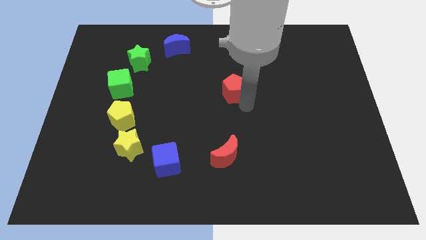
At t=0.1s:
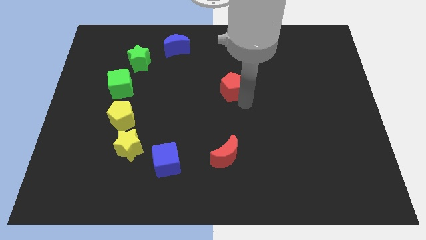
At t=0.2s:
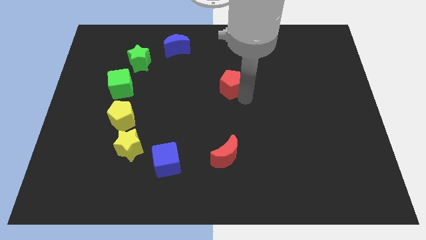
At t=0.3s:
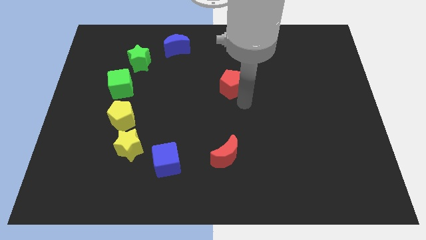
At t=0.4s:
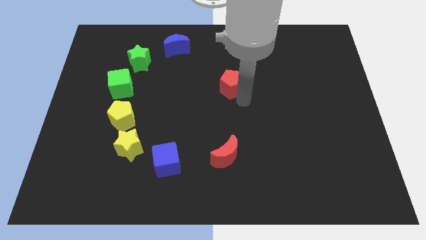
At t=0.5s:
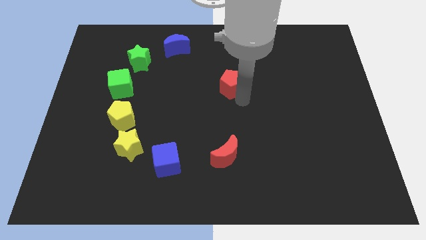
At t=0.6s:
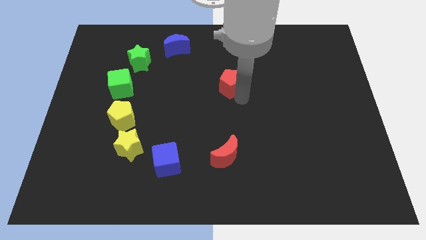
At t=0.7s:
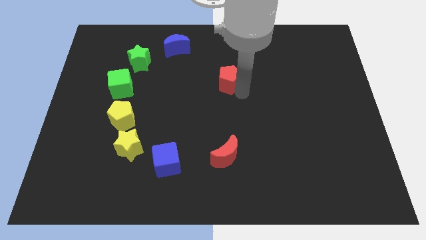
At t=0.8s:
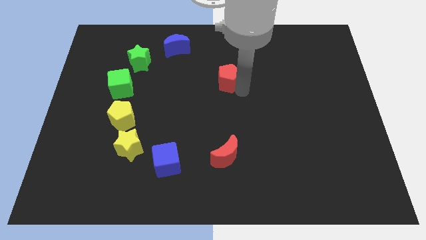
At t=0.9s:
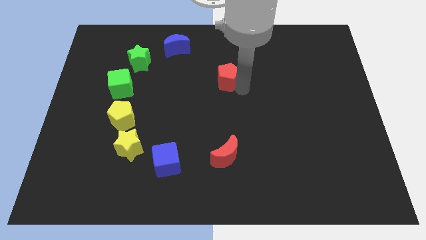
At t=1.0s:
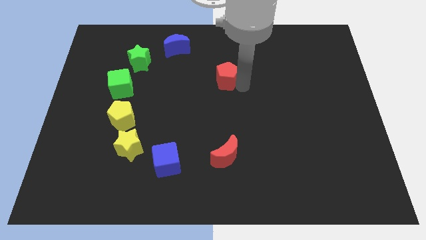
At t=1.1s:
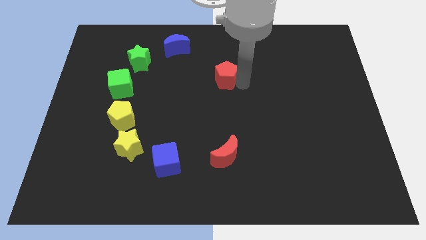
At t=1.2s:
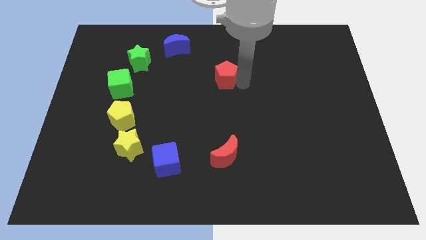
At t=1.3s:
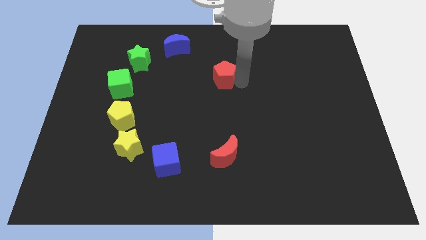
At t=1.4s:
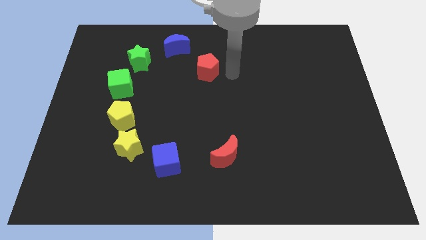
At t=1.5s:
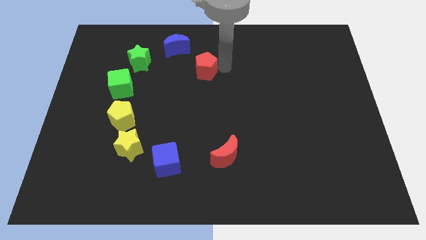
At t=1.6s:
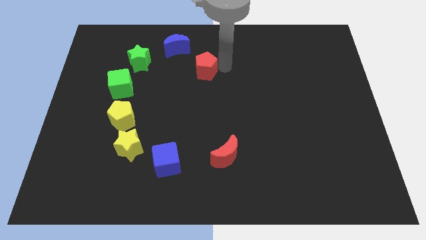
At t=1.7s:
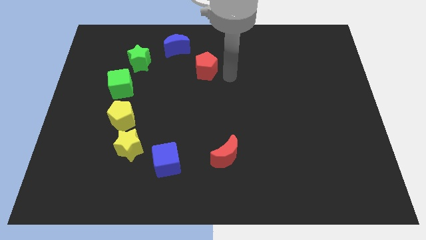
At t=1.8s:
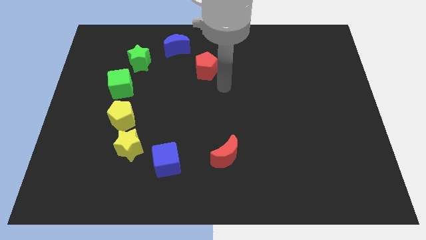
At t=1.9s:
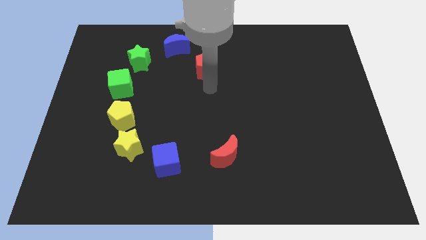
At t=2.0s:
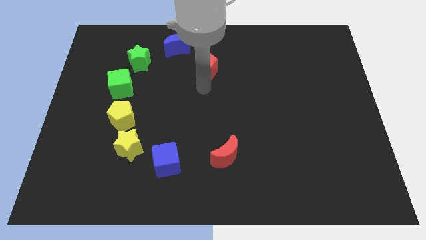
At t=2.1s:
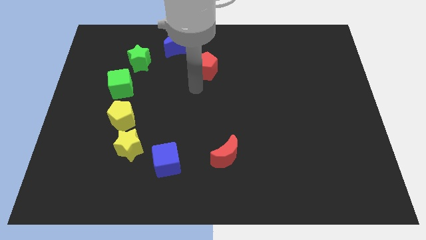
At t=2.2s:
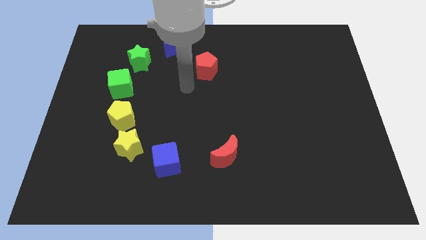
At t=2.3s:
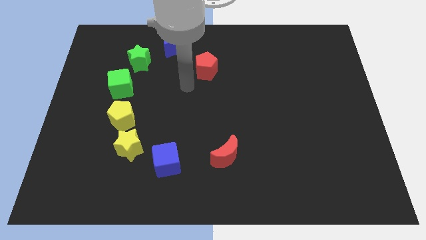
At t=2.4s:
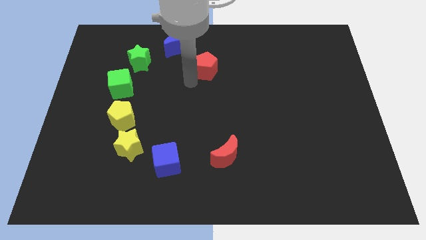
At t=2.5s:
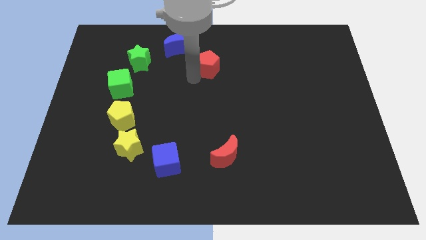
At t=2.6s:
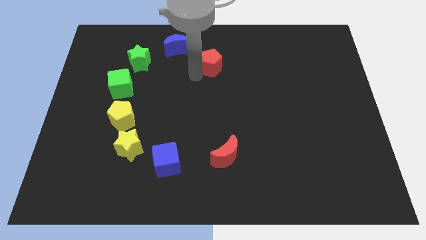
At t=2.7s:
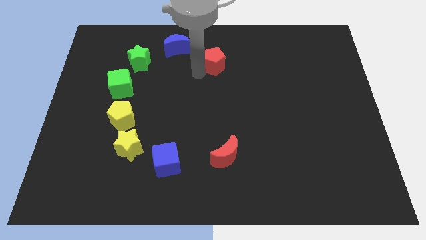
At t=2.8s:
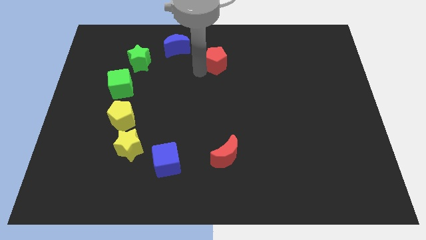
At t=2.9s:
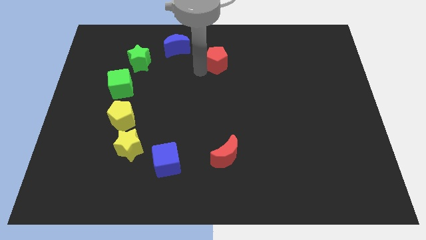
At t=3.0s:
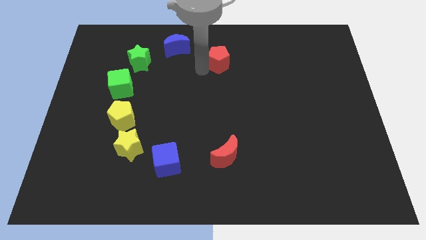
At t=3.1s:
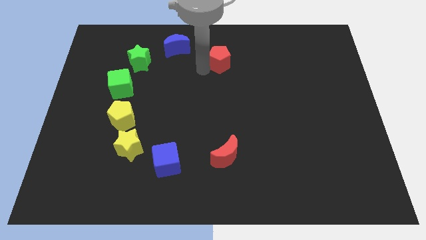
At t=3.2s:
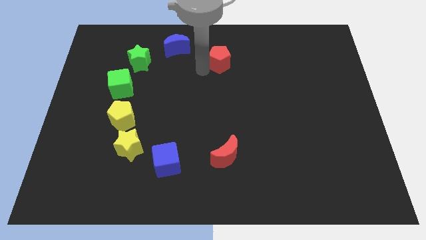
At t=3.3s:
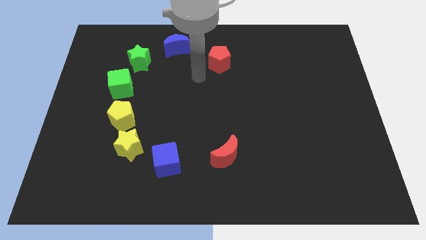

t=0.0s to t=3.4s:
move red pentagon near blue moon

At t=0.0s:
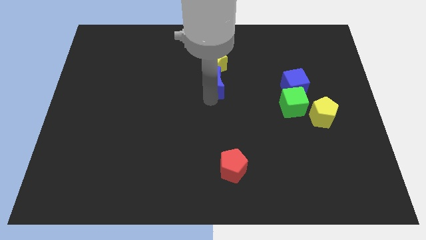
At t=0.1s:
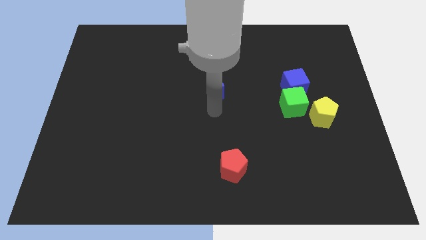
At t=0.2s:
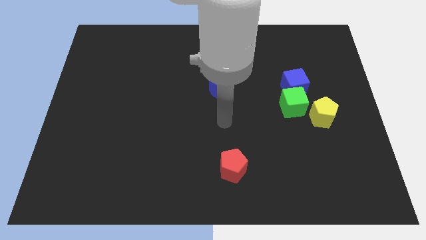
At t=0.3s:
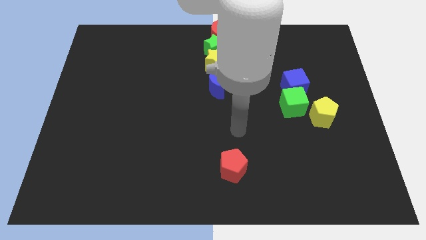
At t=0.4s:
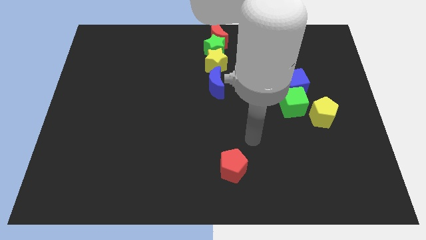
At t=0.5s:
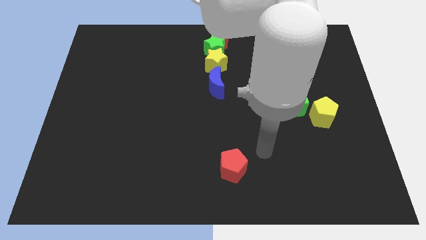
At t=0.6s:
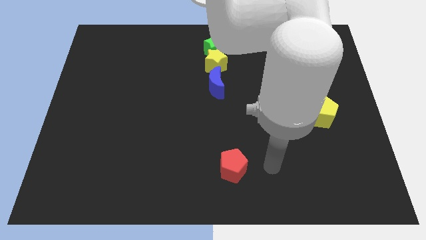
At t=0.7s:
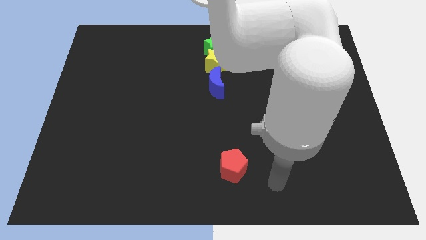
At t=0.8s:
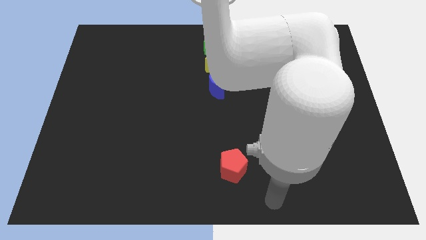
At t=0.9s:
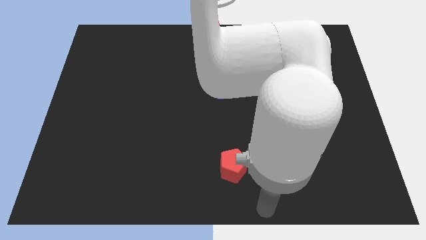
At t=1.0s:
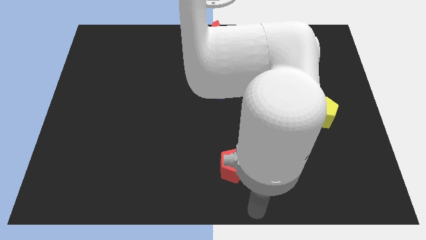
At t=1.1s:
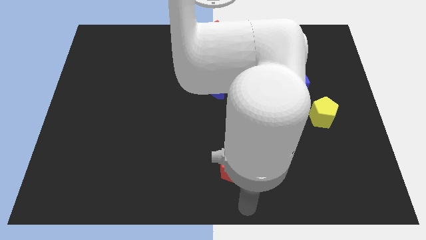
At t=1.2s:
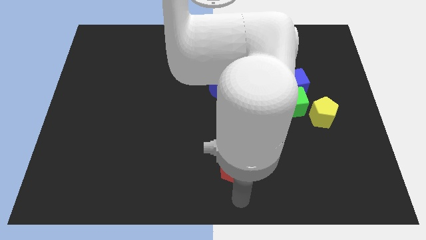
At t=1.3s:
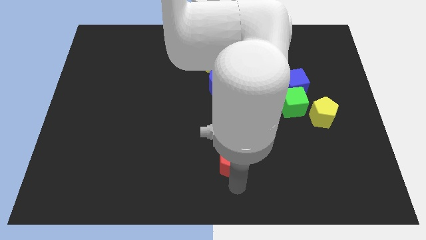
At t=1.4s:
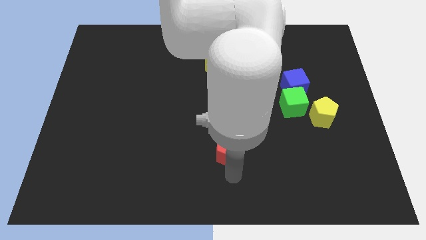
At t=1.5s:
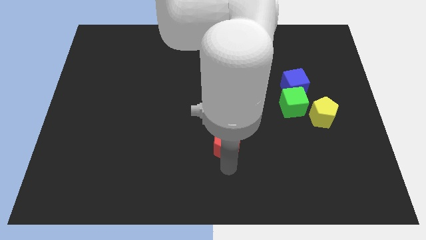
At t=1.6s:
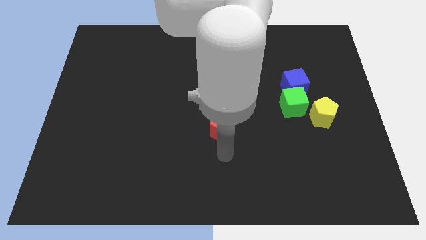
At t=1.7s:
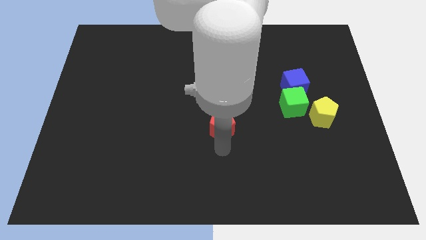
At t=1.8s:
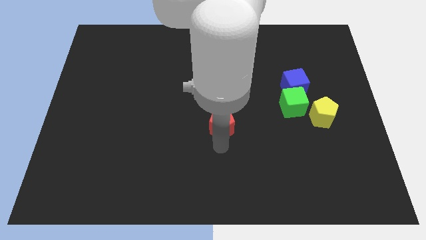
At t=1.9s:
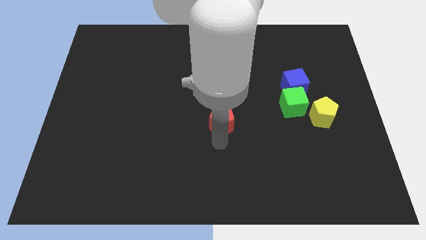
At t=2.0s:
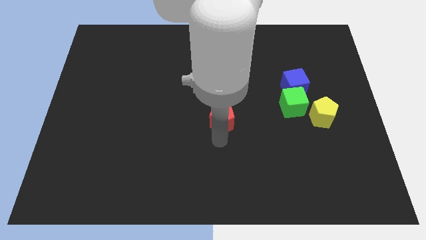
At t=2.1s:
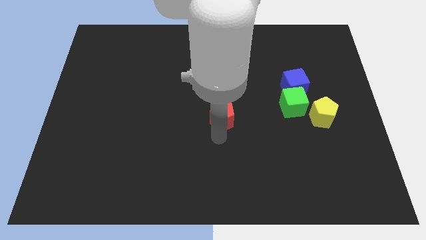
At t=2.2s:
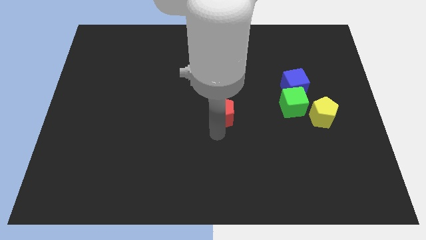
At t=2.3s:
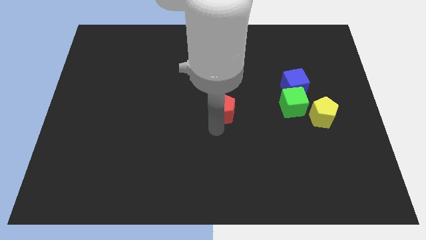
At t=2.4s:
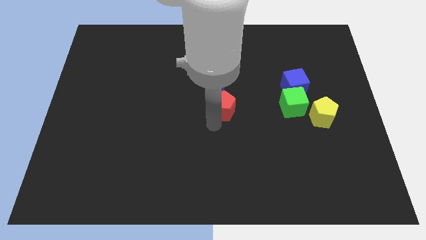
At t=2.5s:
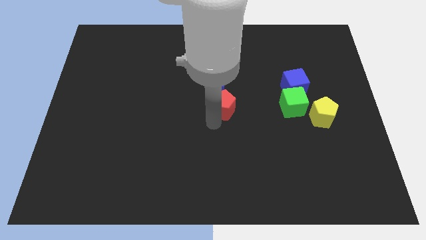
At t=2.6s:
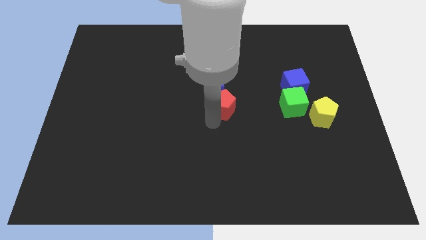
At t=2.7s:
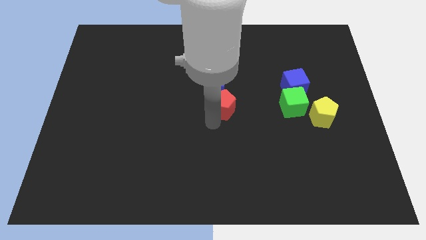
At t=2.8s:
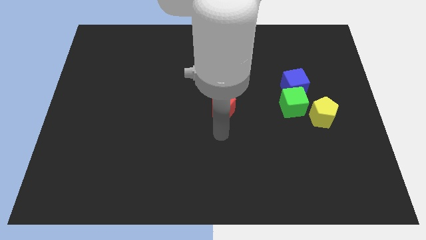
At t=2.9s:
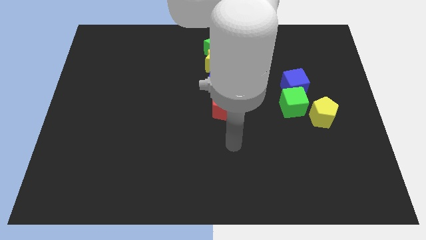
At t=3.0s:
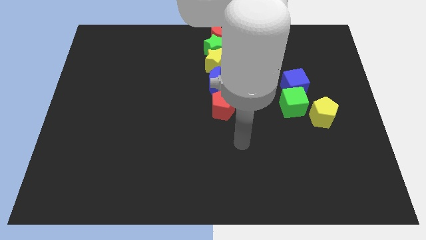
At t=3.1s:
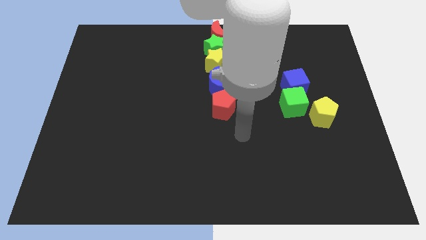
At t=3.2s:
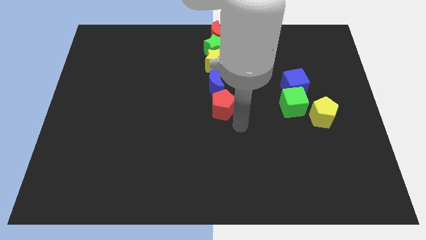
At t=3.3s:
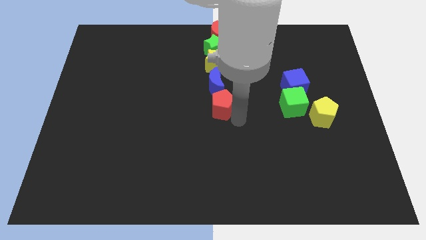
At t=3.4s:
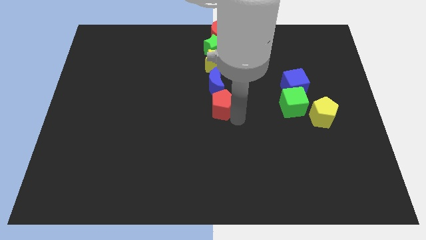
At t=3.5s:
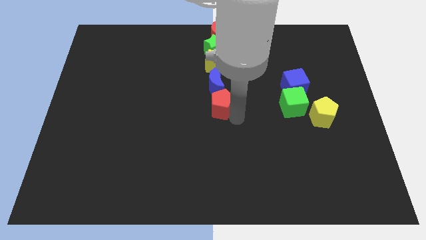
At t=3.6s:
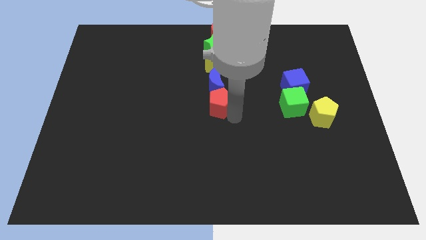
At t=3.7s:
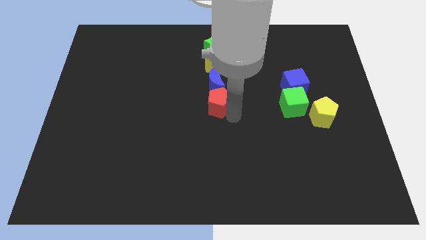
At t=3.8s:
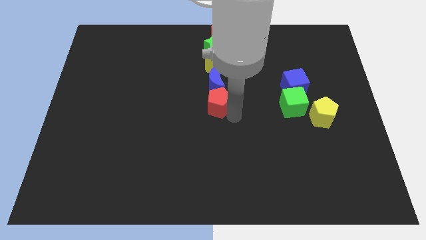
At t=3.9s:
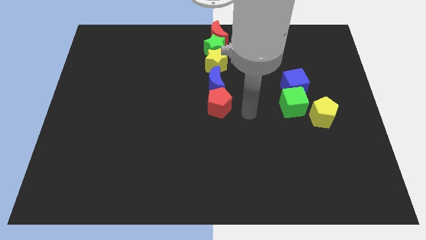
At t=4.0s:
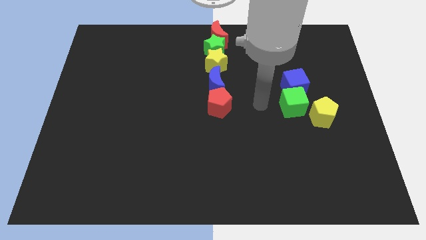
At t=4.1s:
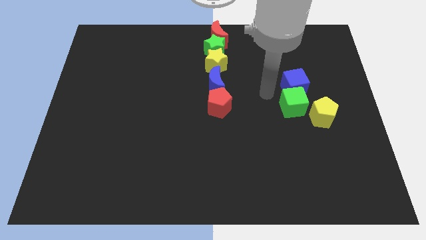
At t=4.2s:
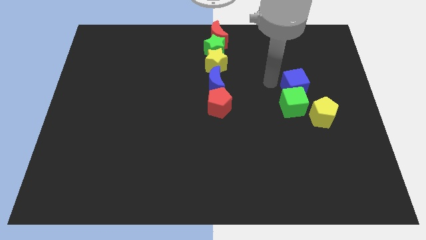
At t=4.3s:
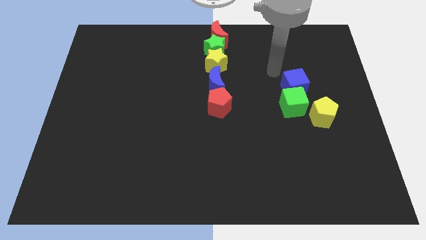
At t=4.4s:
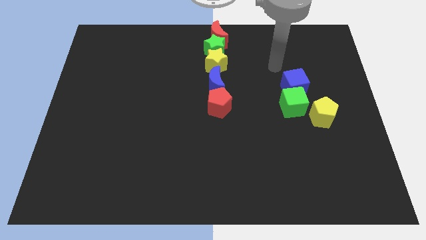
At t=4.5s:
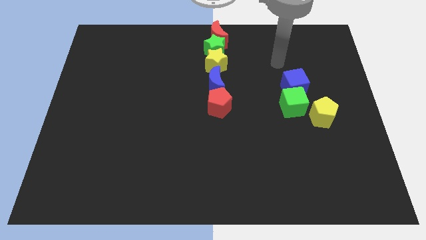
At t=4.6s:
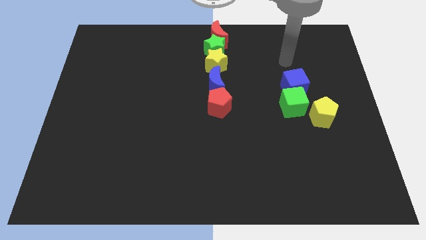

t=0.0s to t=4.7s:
push the red pentagon below the blue moon

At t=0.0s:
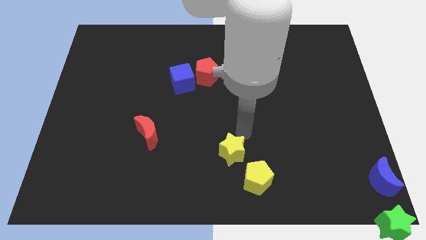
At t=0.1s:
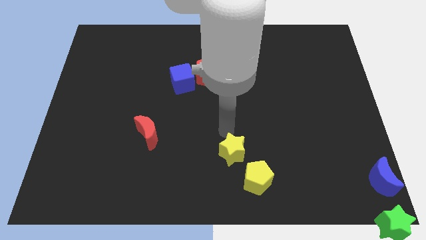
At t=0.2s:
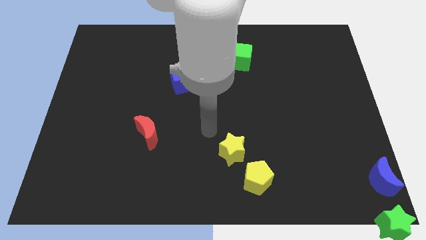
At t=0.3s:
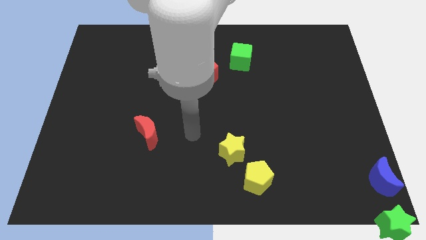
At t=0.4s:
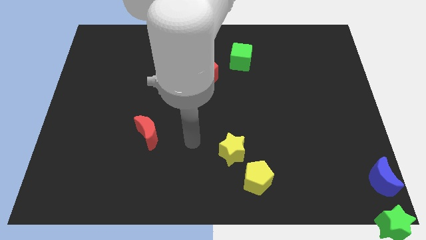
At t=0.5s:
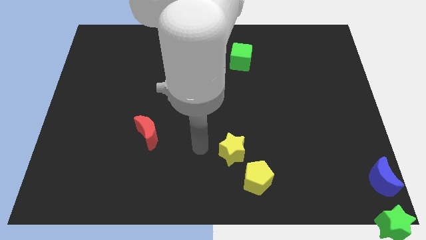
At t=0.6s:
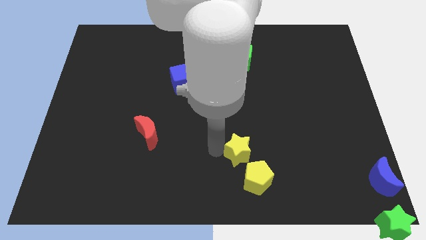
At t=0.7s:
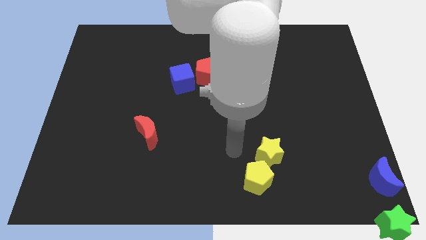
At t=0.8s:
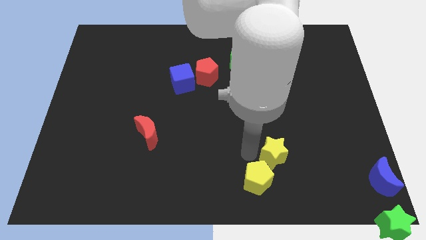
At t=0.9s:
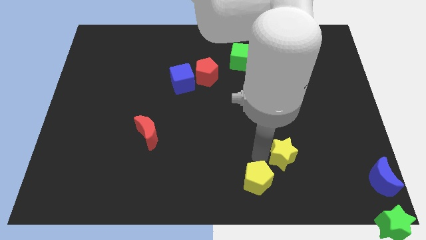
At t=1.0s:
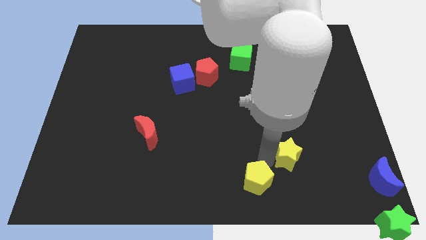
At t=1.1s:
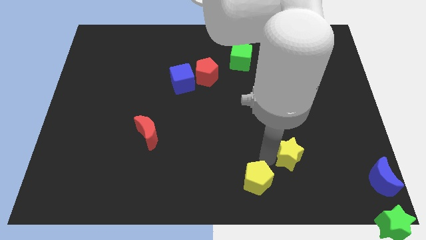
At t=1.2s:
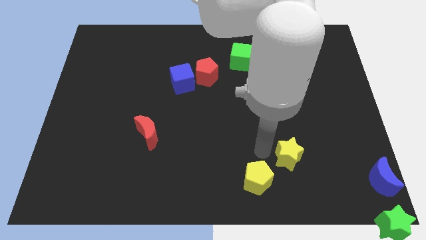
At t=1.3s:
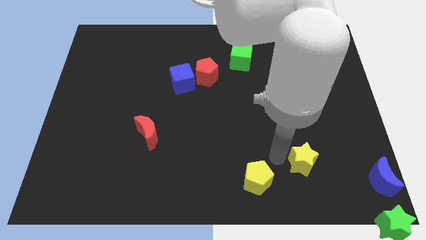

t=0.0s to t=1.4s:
drag the yellow star diagonally top right to the yellow pentagon
